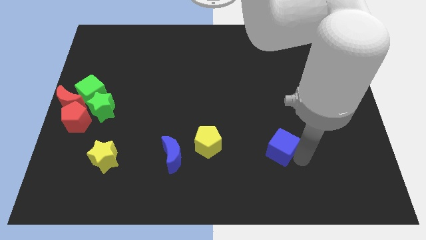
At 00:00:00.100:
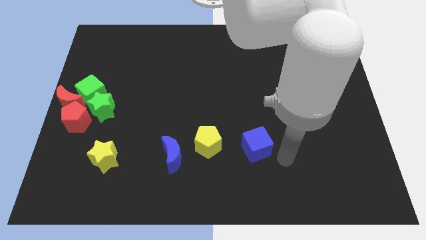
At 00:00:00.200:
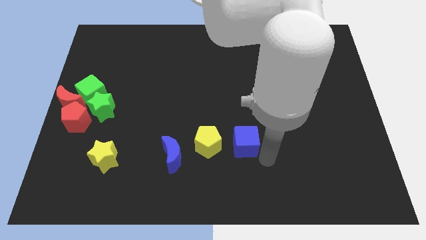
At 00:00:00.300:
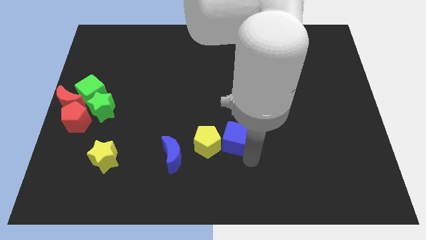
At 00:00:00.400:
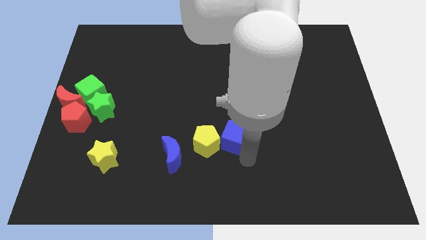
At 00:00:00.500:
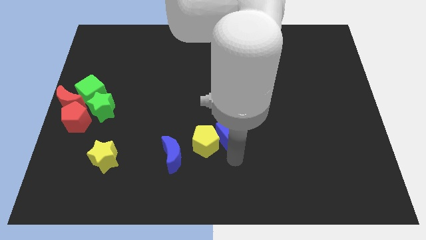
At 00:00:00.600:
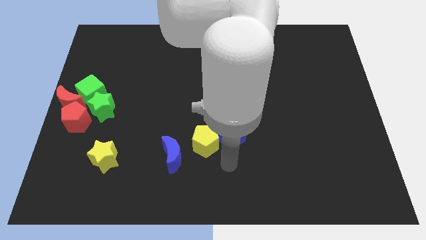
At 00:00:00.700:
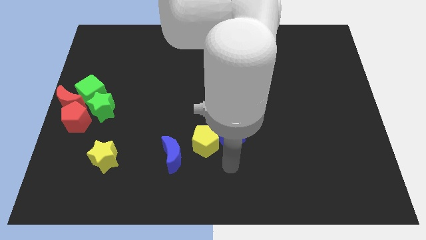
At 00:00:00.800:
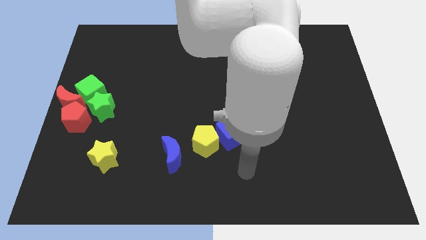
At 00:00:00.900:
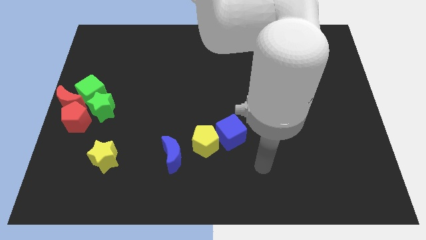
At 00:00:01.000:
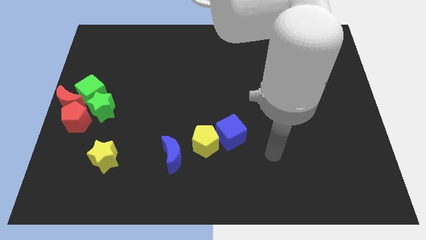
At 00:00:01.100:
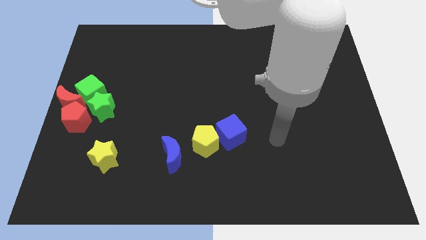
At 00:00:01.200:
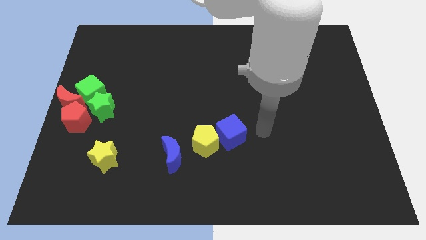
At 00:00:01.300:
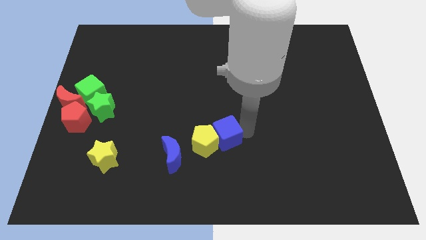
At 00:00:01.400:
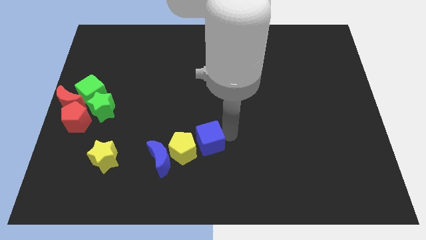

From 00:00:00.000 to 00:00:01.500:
push the blue cube into the yellow pentagon

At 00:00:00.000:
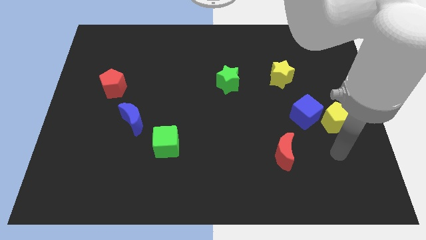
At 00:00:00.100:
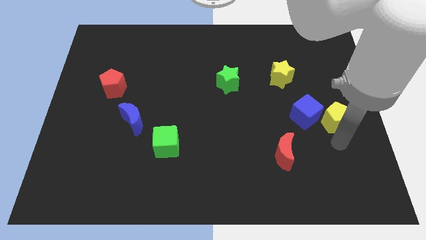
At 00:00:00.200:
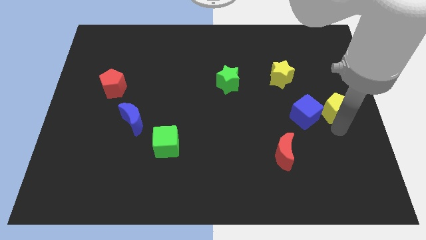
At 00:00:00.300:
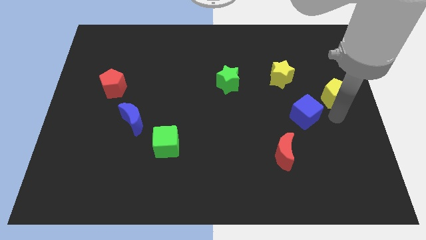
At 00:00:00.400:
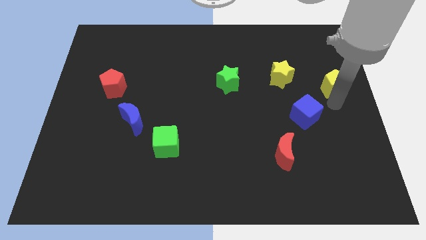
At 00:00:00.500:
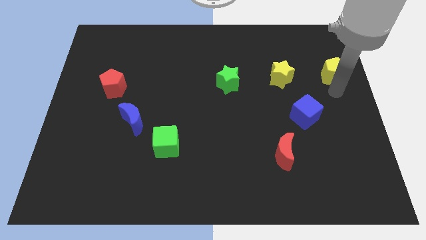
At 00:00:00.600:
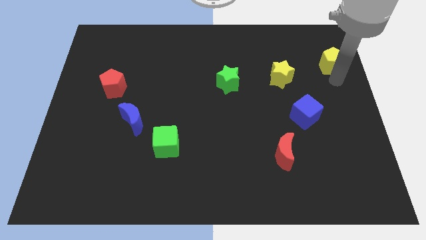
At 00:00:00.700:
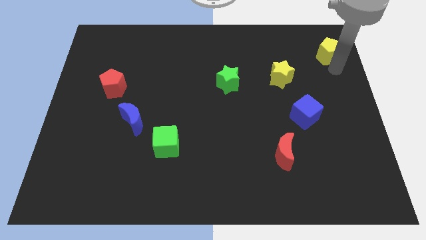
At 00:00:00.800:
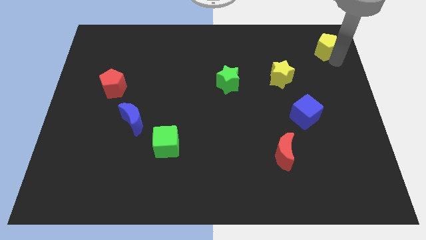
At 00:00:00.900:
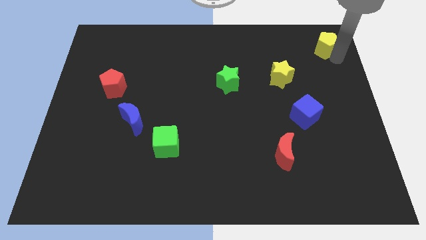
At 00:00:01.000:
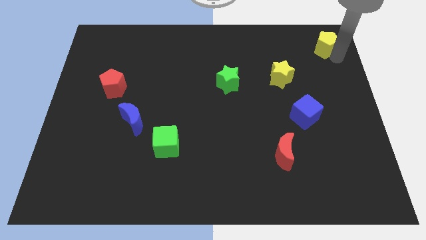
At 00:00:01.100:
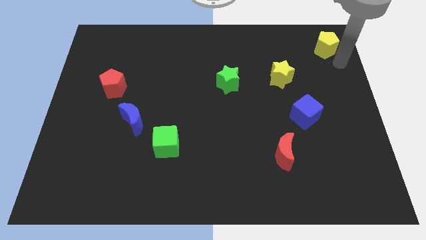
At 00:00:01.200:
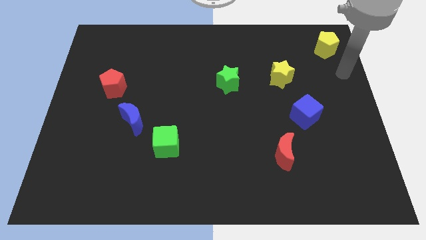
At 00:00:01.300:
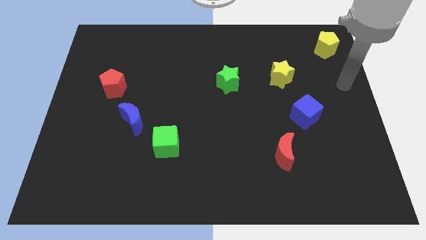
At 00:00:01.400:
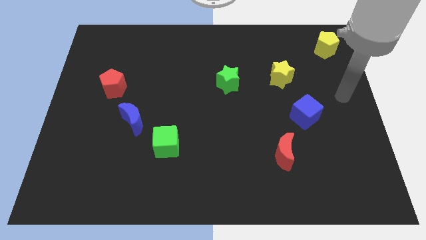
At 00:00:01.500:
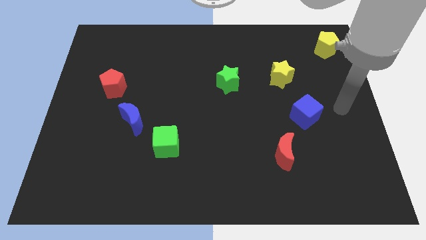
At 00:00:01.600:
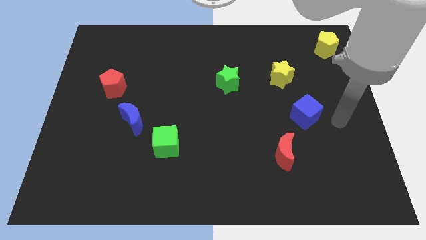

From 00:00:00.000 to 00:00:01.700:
push the yellow pentagon upward

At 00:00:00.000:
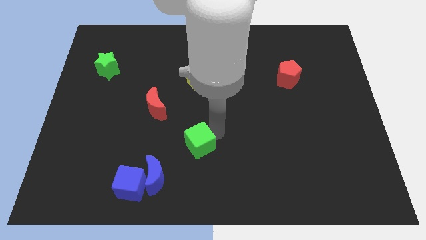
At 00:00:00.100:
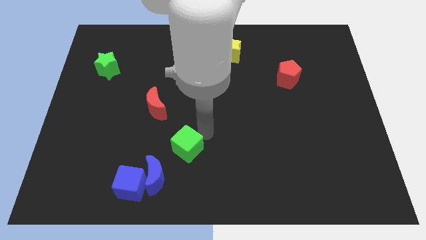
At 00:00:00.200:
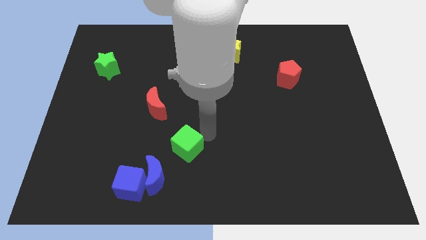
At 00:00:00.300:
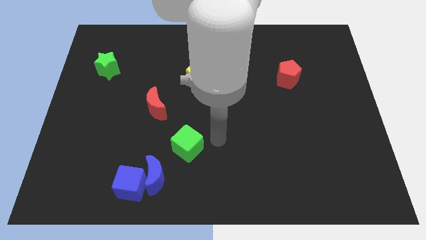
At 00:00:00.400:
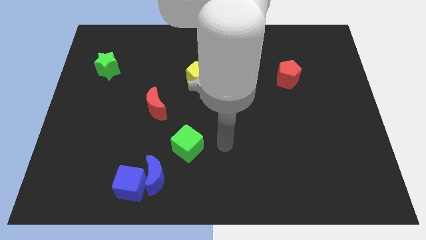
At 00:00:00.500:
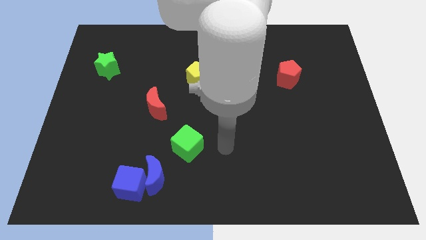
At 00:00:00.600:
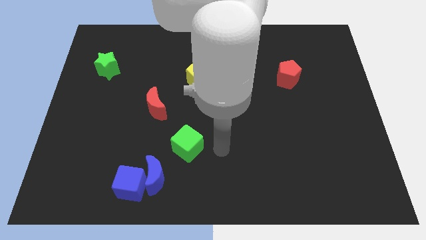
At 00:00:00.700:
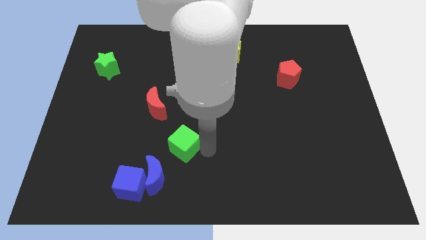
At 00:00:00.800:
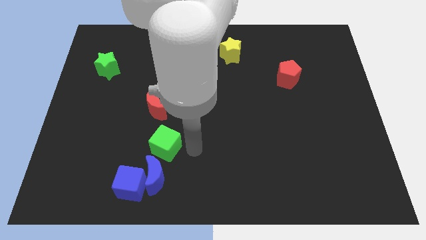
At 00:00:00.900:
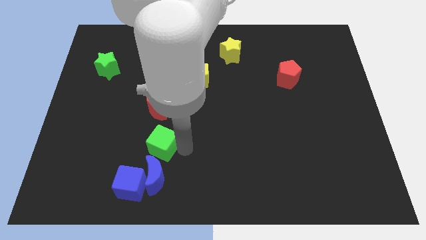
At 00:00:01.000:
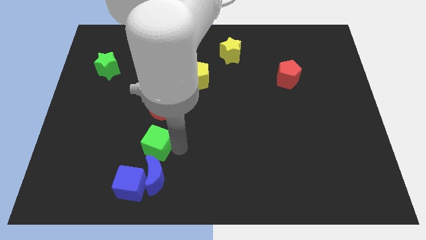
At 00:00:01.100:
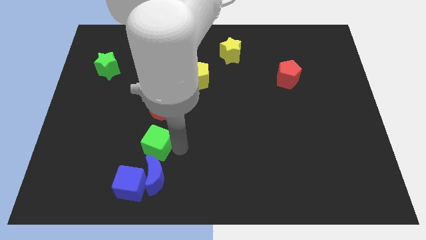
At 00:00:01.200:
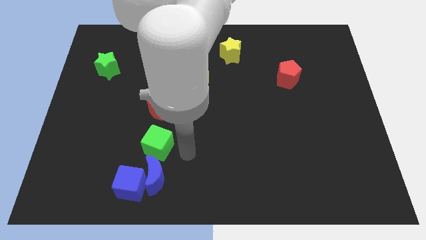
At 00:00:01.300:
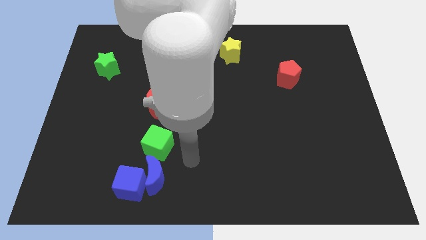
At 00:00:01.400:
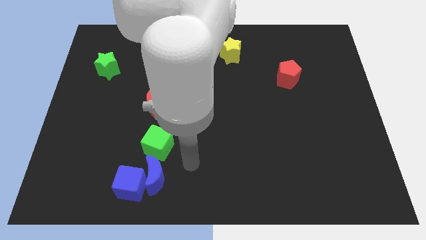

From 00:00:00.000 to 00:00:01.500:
push the green cube to the top of the blue crescent

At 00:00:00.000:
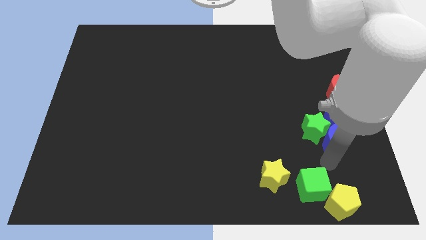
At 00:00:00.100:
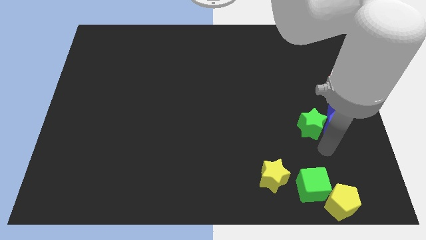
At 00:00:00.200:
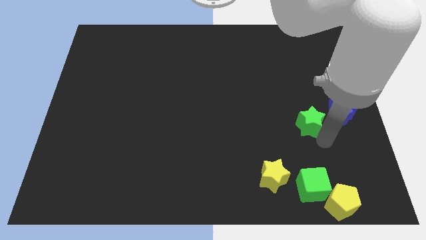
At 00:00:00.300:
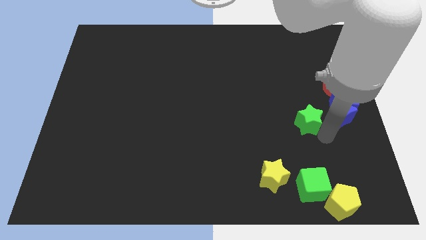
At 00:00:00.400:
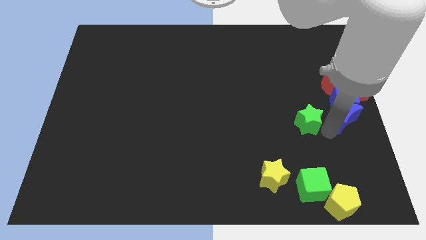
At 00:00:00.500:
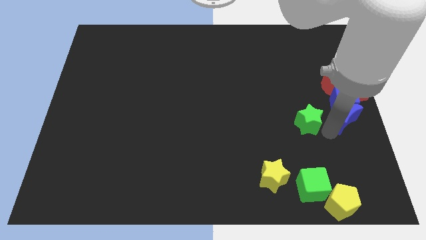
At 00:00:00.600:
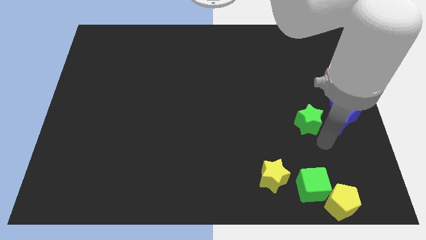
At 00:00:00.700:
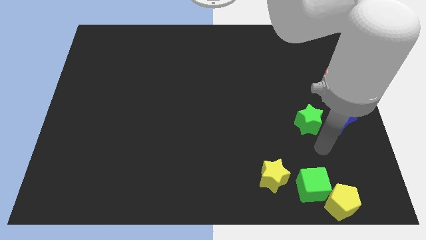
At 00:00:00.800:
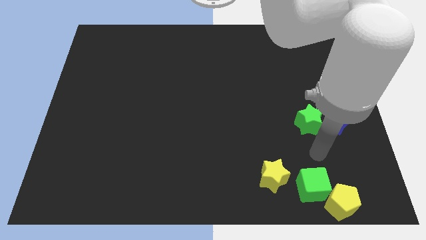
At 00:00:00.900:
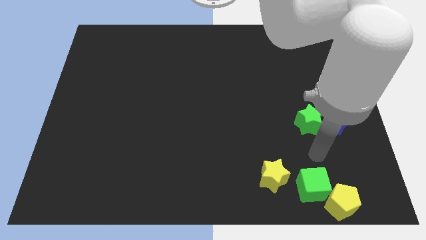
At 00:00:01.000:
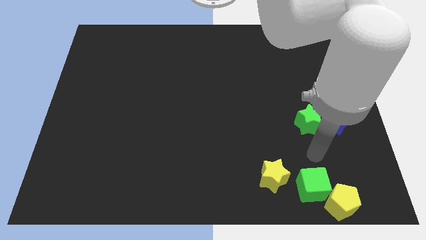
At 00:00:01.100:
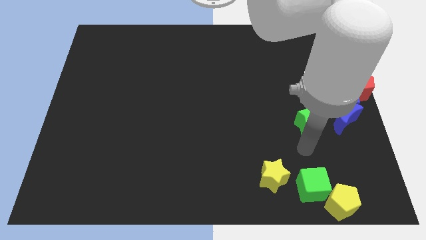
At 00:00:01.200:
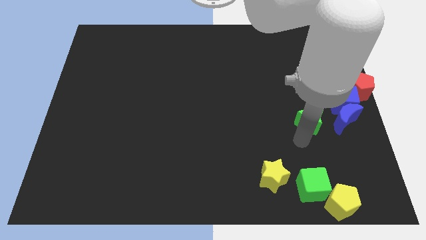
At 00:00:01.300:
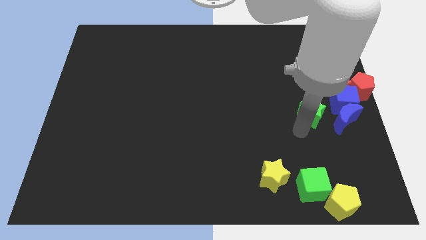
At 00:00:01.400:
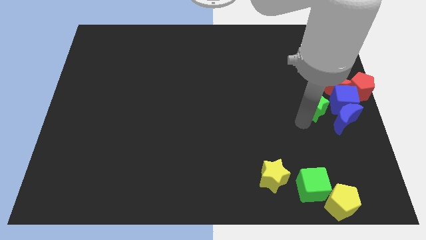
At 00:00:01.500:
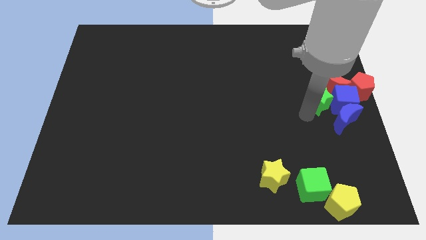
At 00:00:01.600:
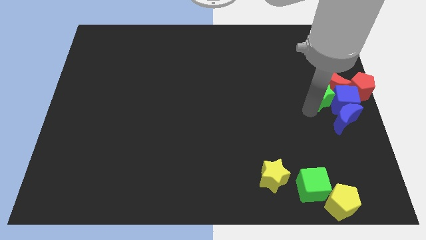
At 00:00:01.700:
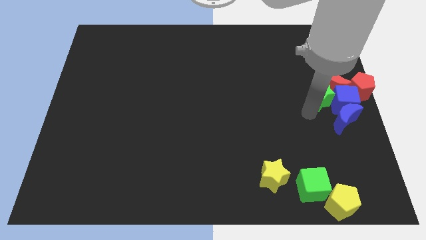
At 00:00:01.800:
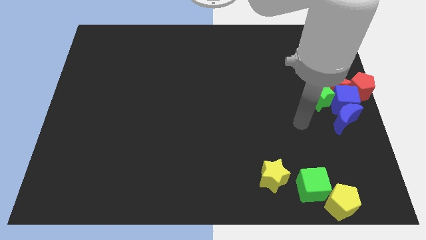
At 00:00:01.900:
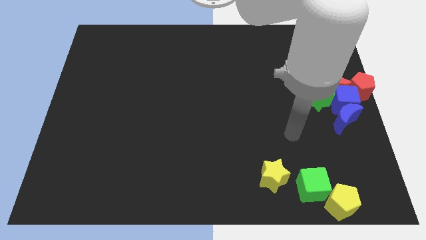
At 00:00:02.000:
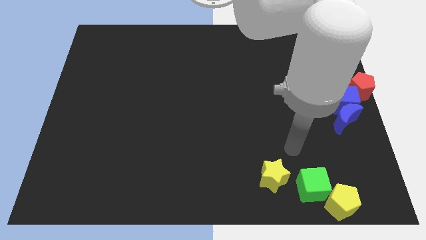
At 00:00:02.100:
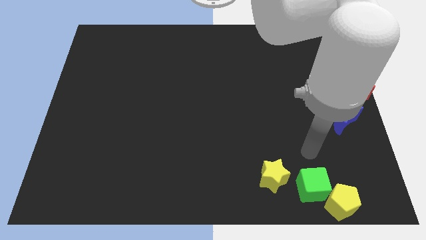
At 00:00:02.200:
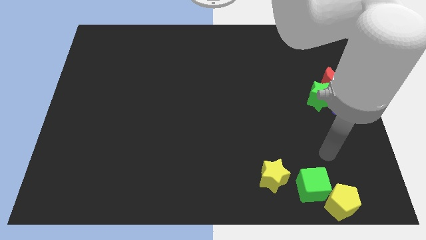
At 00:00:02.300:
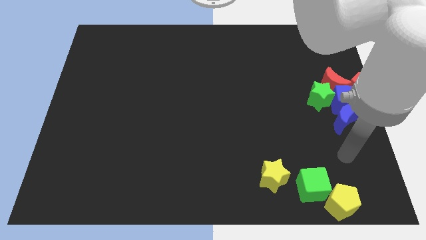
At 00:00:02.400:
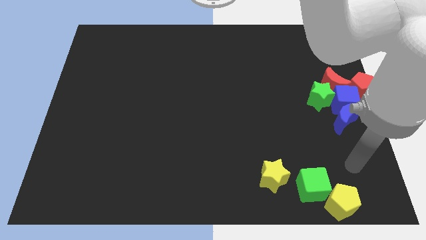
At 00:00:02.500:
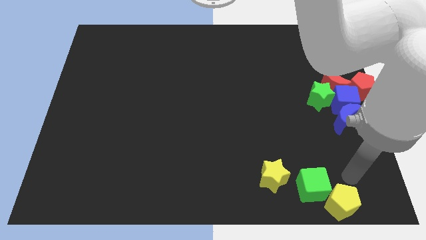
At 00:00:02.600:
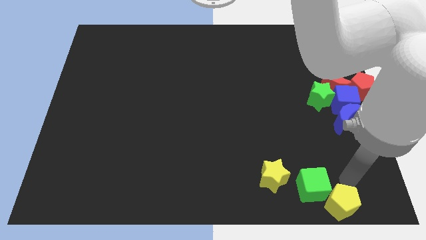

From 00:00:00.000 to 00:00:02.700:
move the blue crescent and the green star into the blue cube

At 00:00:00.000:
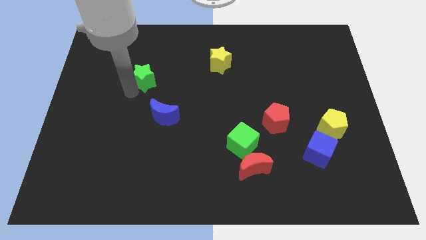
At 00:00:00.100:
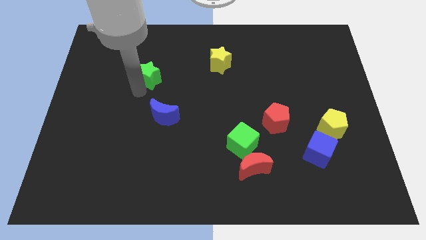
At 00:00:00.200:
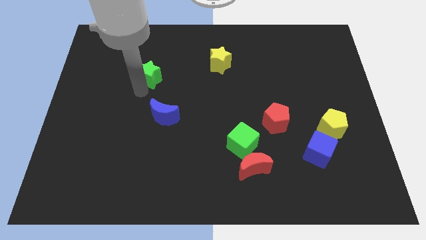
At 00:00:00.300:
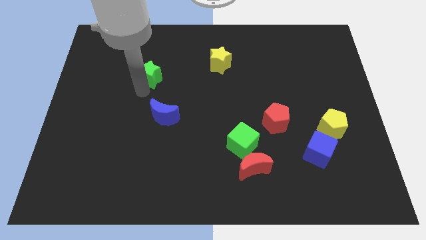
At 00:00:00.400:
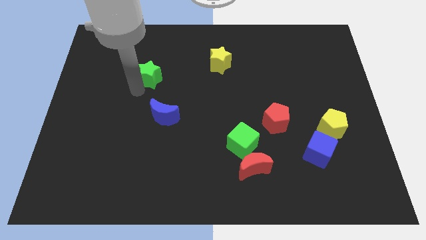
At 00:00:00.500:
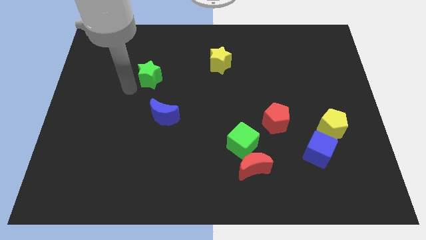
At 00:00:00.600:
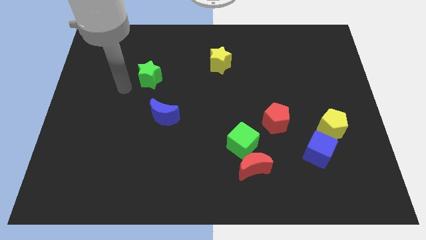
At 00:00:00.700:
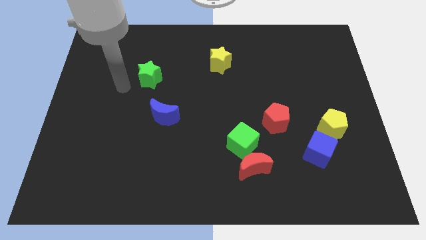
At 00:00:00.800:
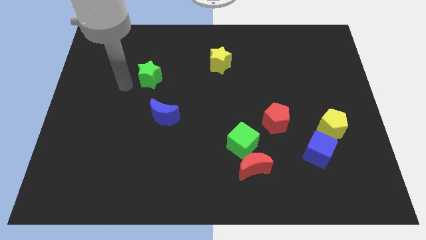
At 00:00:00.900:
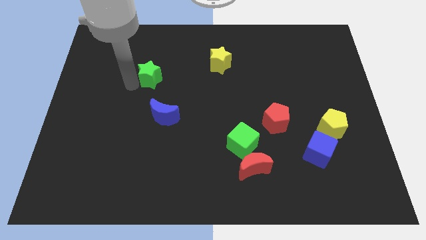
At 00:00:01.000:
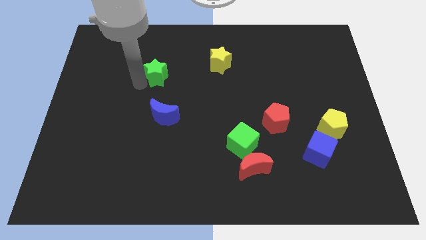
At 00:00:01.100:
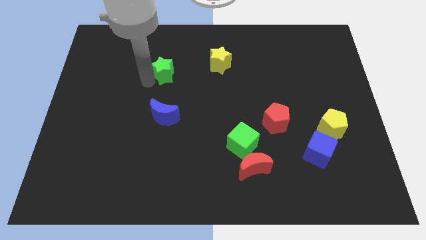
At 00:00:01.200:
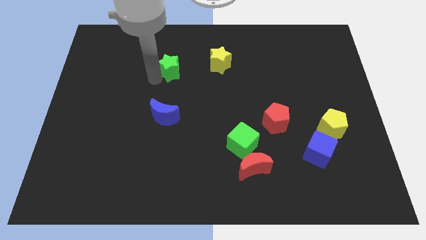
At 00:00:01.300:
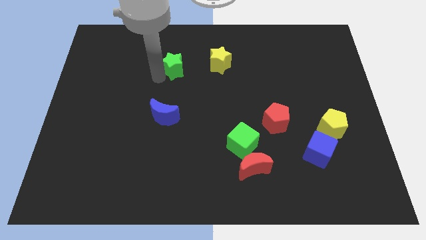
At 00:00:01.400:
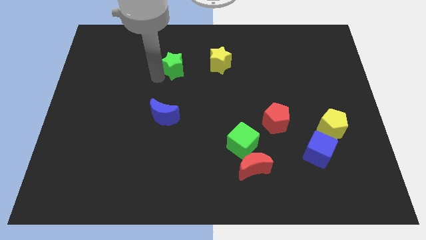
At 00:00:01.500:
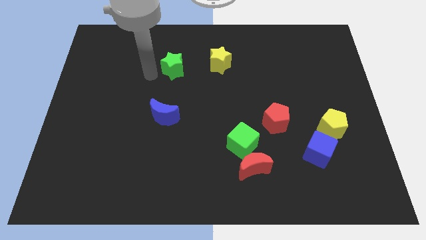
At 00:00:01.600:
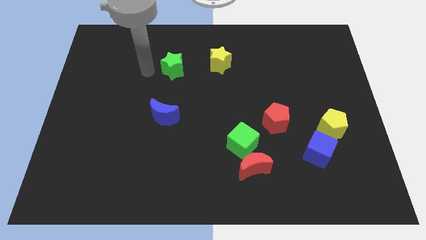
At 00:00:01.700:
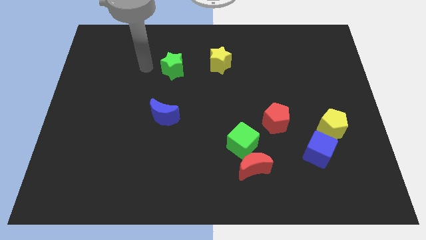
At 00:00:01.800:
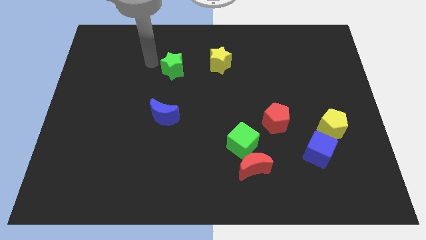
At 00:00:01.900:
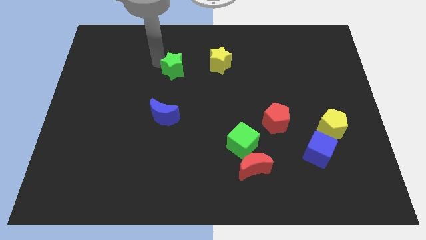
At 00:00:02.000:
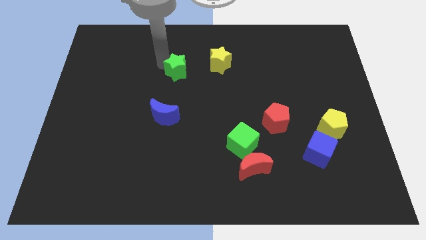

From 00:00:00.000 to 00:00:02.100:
put the green star above the blue crescent
